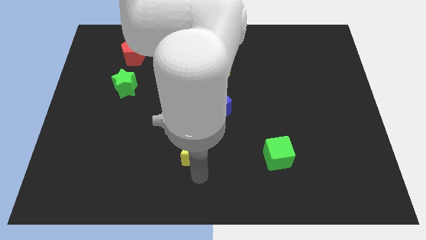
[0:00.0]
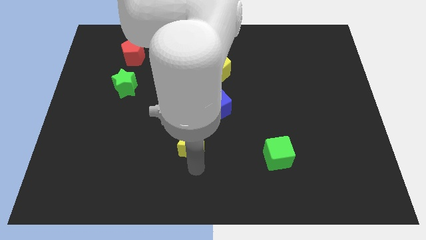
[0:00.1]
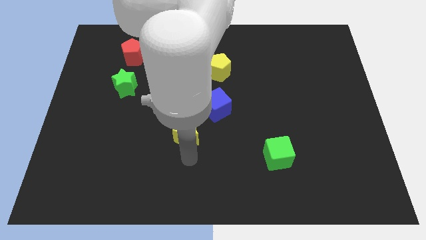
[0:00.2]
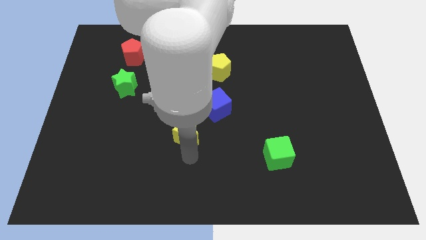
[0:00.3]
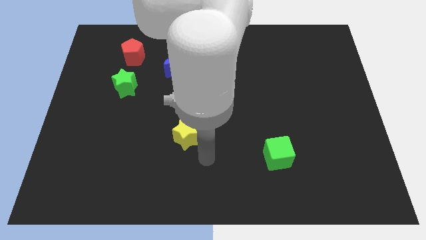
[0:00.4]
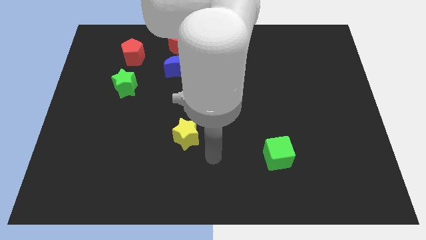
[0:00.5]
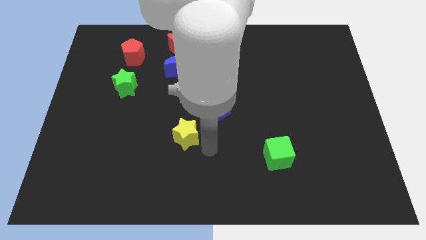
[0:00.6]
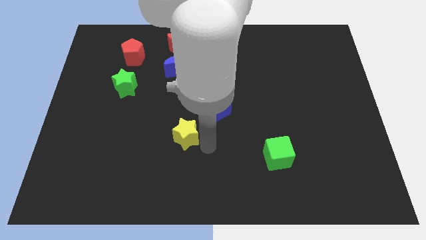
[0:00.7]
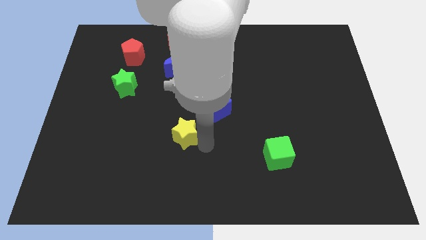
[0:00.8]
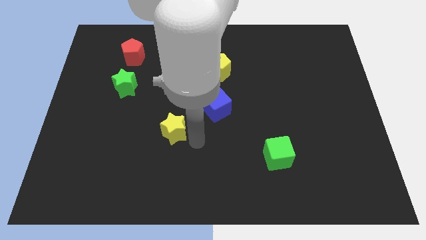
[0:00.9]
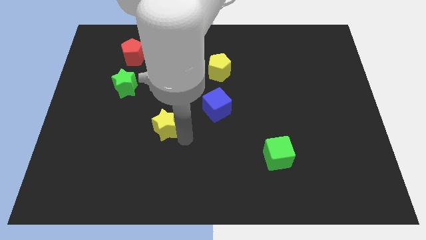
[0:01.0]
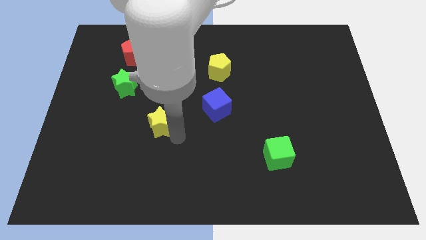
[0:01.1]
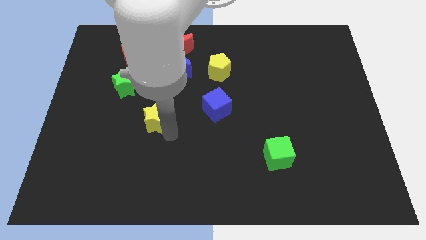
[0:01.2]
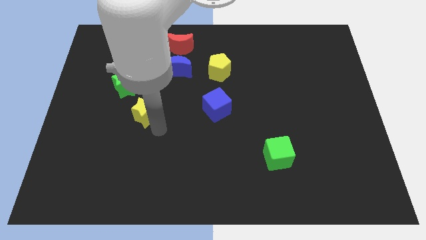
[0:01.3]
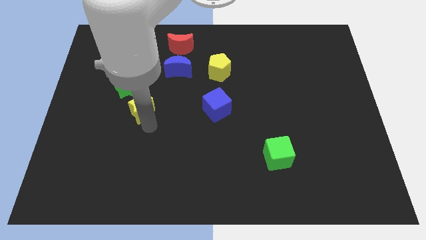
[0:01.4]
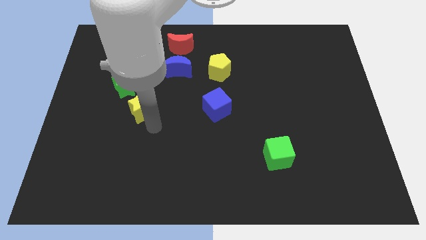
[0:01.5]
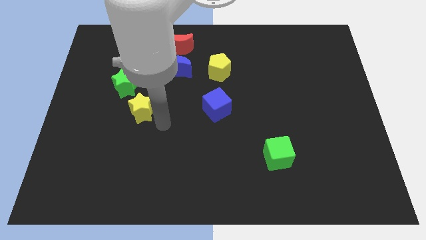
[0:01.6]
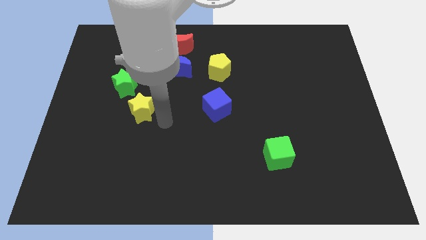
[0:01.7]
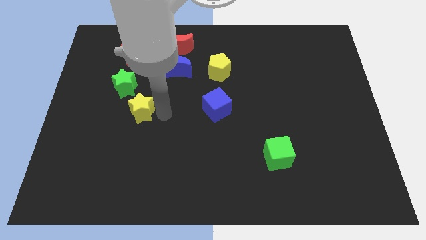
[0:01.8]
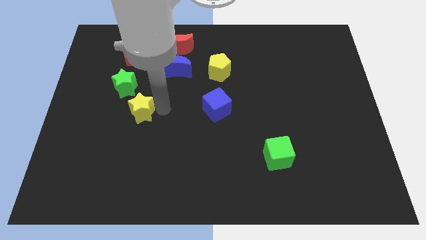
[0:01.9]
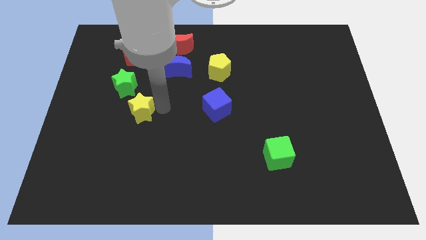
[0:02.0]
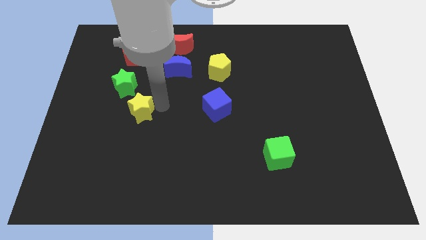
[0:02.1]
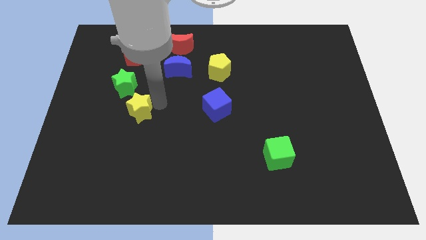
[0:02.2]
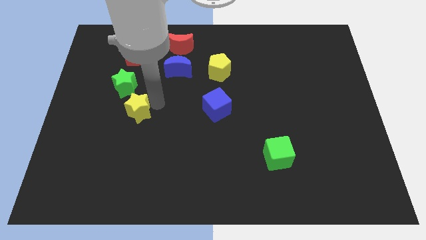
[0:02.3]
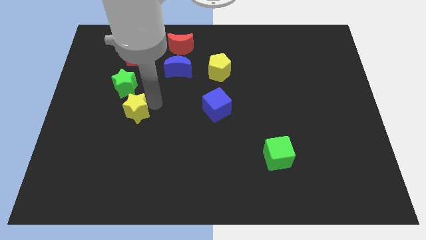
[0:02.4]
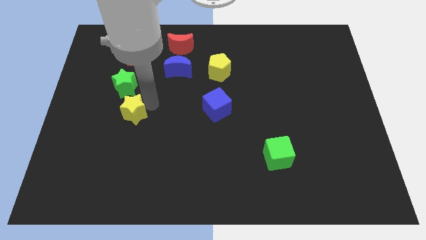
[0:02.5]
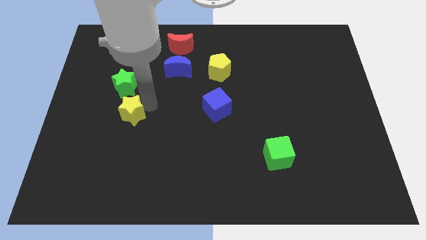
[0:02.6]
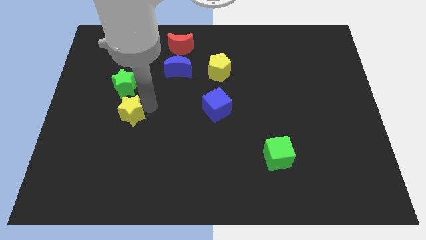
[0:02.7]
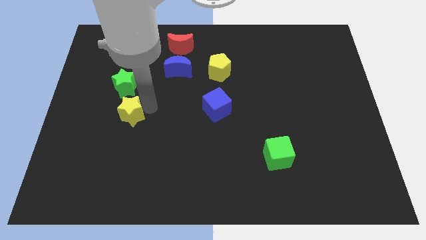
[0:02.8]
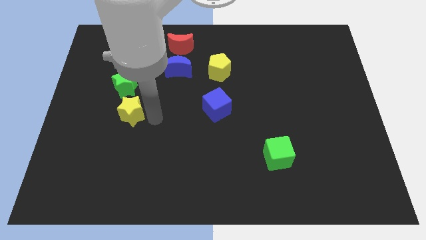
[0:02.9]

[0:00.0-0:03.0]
move the yellow star towards the green star

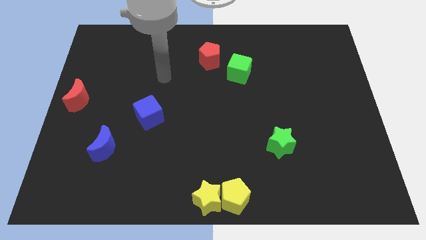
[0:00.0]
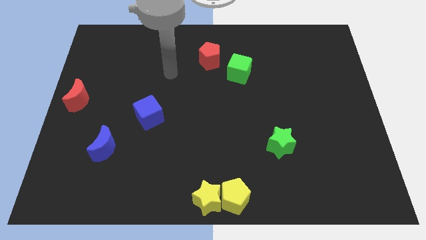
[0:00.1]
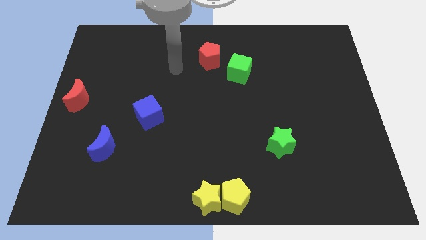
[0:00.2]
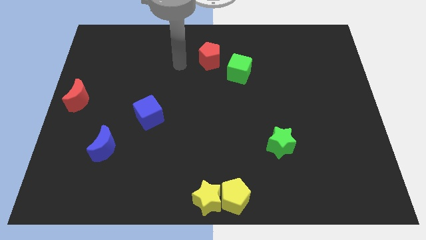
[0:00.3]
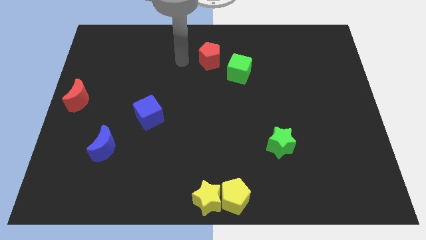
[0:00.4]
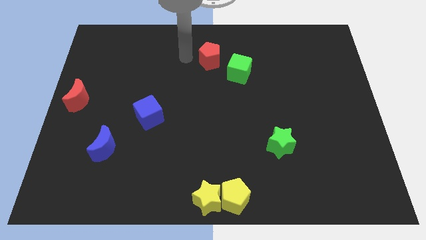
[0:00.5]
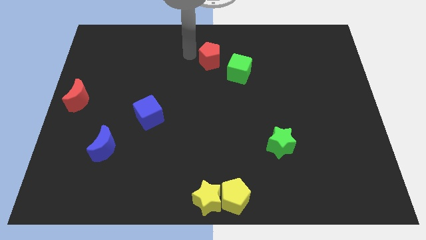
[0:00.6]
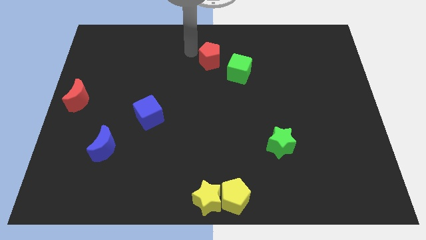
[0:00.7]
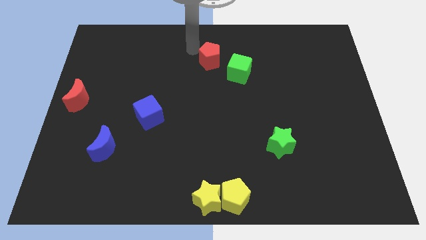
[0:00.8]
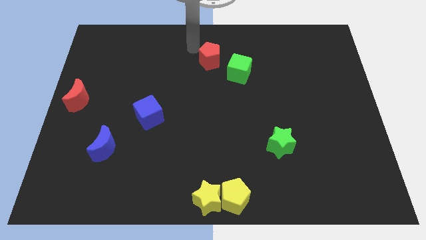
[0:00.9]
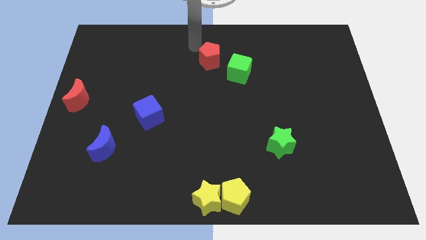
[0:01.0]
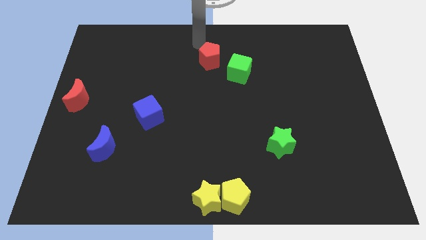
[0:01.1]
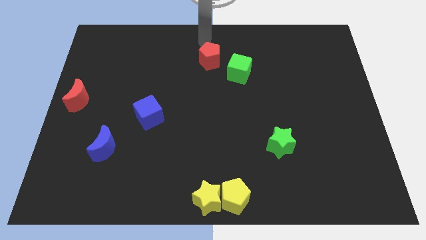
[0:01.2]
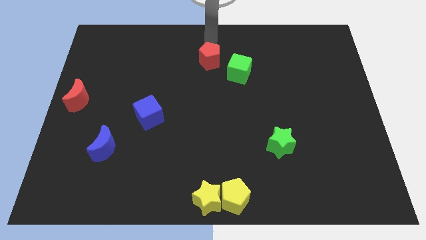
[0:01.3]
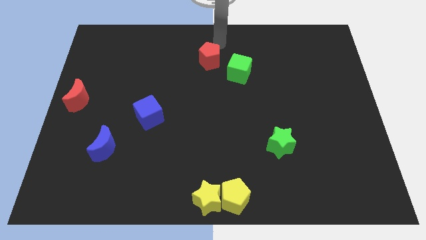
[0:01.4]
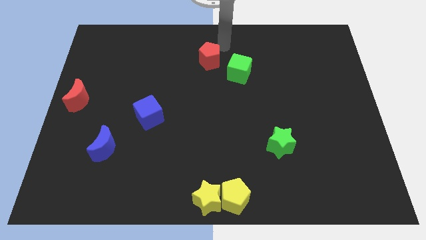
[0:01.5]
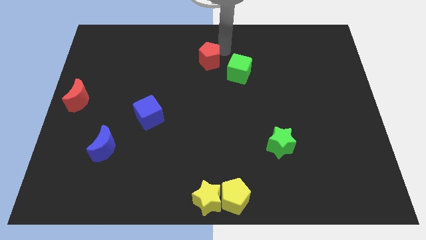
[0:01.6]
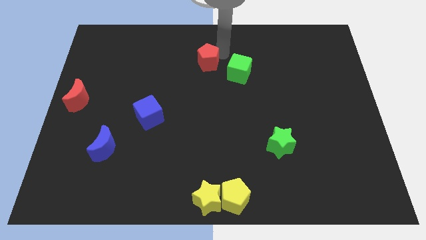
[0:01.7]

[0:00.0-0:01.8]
touch your arm to the red pentagon

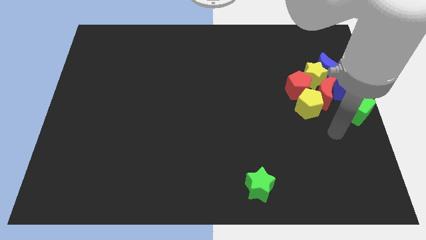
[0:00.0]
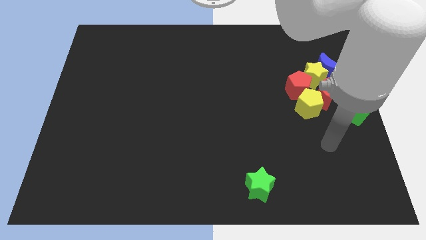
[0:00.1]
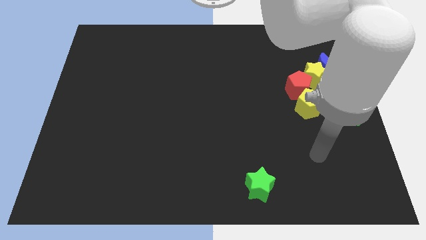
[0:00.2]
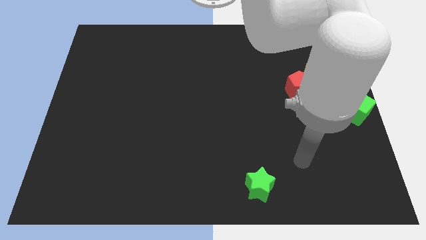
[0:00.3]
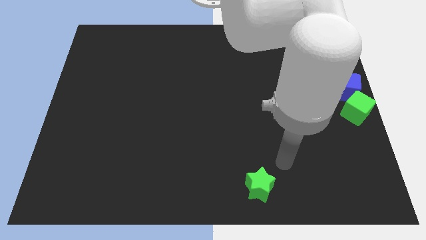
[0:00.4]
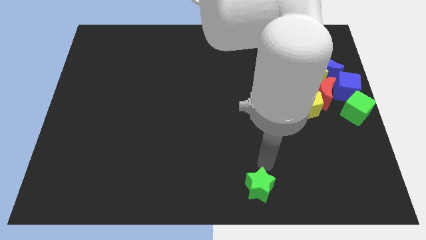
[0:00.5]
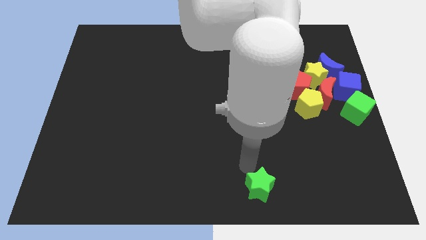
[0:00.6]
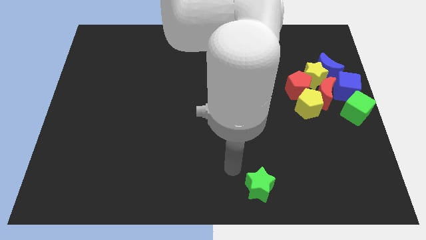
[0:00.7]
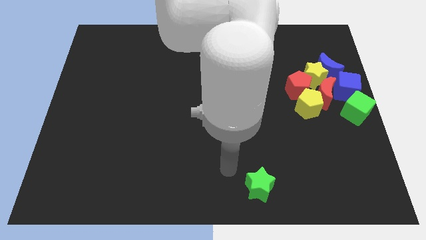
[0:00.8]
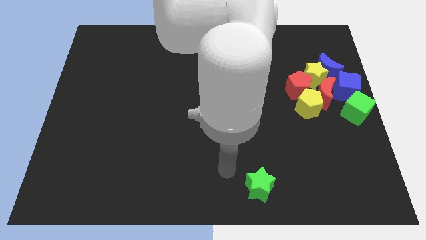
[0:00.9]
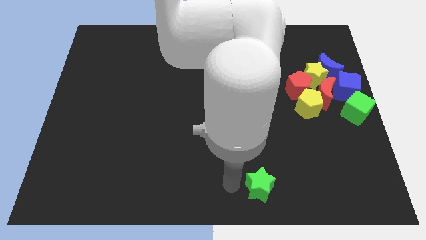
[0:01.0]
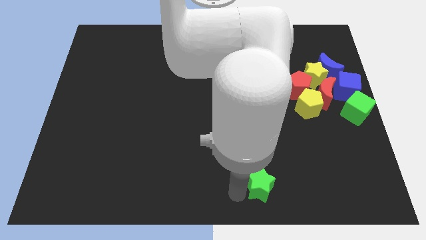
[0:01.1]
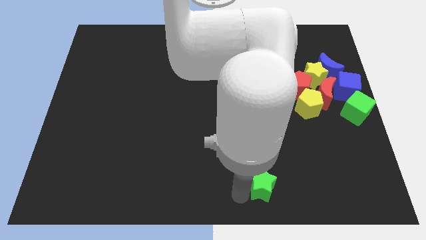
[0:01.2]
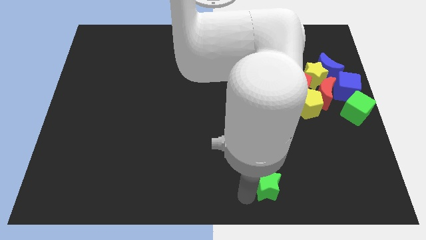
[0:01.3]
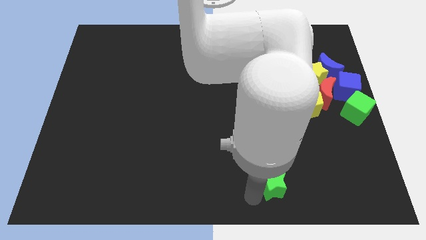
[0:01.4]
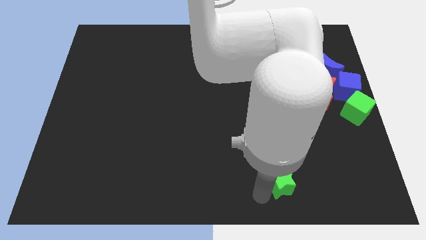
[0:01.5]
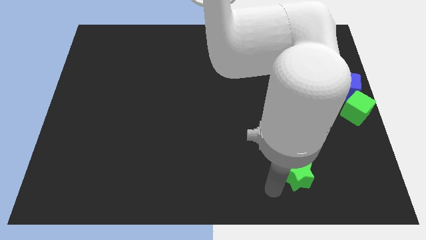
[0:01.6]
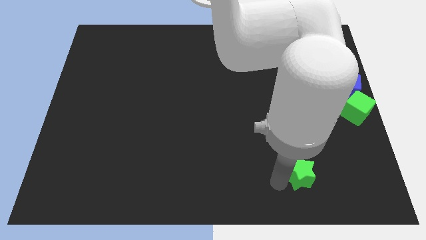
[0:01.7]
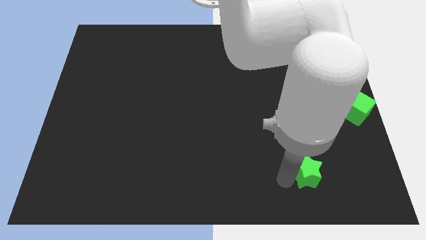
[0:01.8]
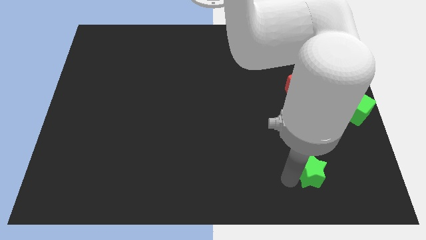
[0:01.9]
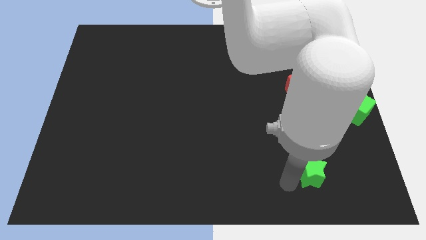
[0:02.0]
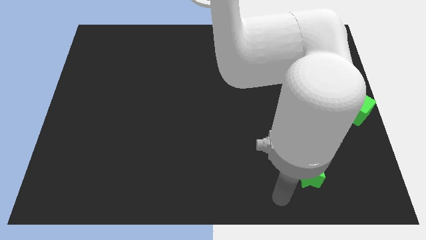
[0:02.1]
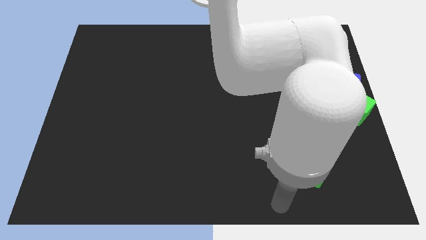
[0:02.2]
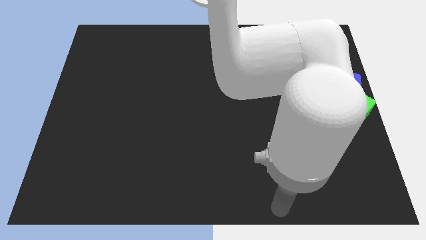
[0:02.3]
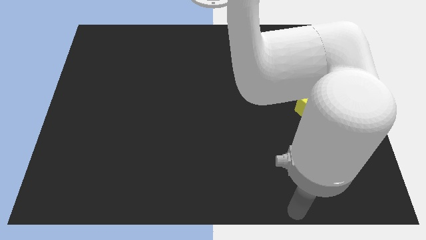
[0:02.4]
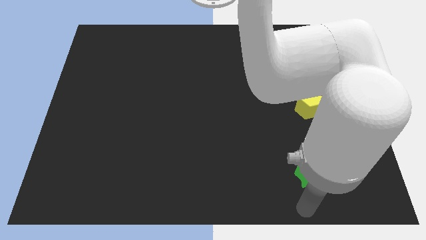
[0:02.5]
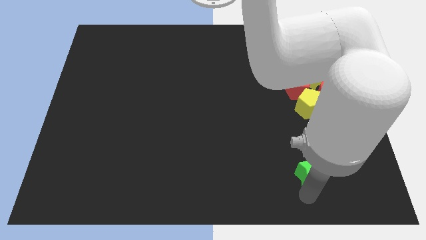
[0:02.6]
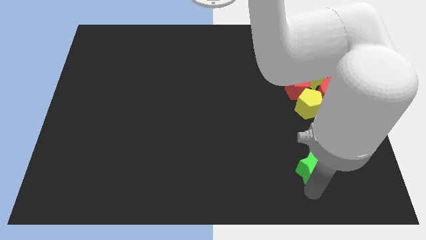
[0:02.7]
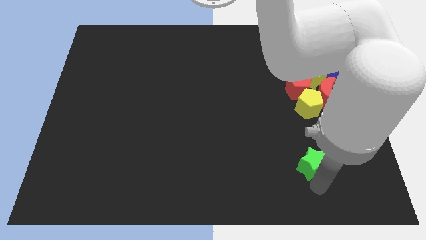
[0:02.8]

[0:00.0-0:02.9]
move green star towards right side

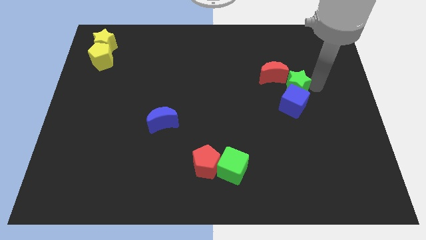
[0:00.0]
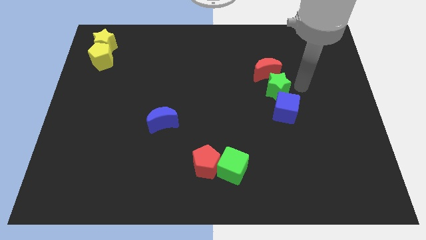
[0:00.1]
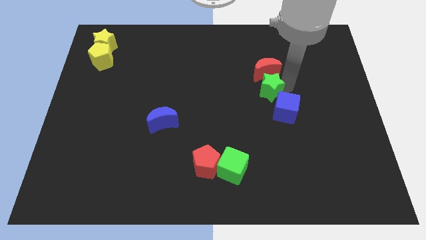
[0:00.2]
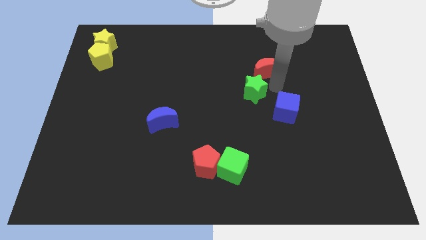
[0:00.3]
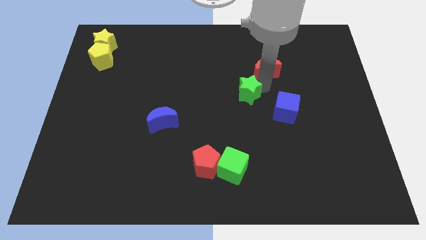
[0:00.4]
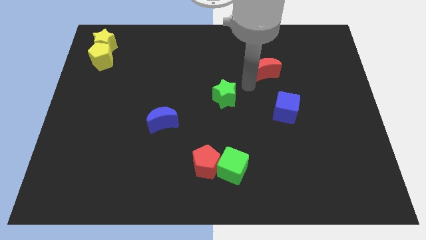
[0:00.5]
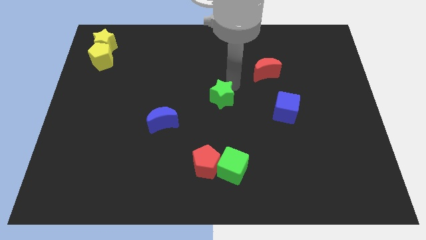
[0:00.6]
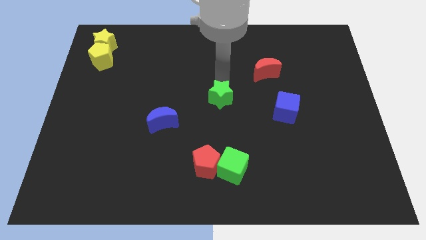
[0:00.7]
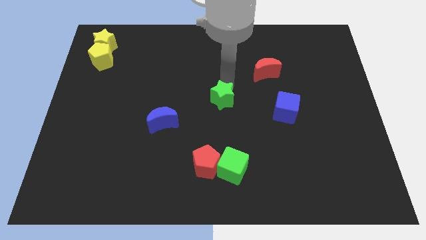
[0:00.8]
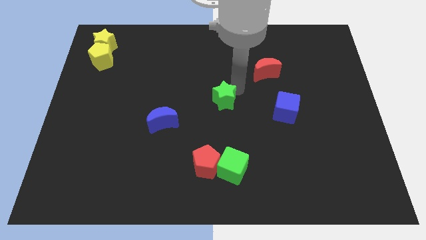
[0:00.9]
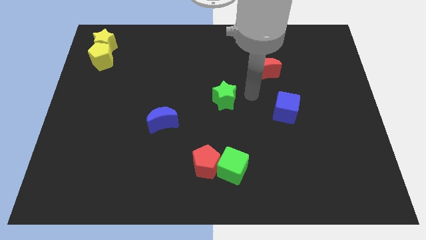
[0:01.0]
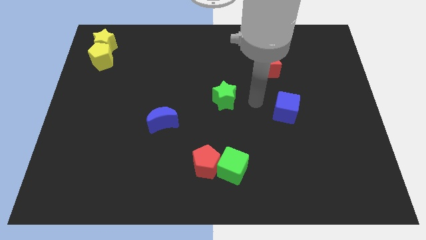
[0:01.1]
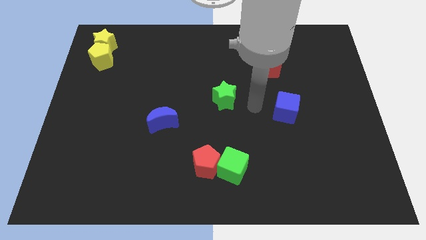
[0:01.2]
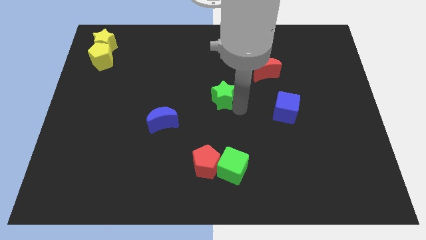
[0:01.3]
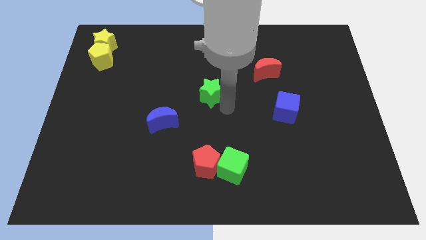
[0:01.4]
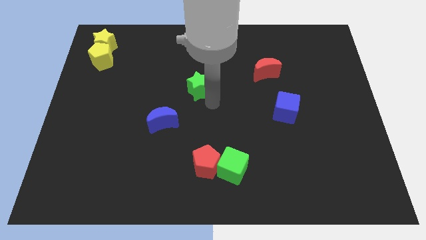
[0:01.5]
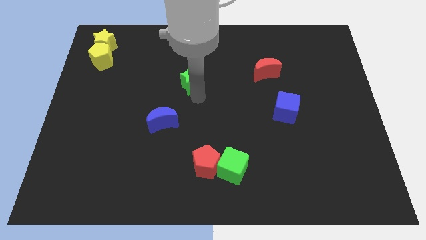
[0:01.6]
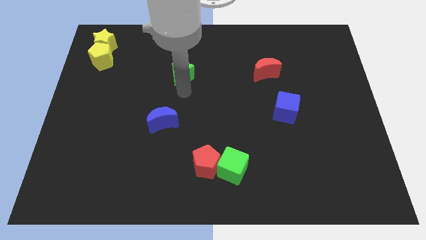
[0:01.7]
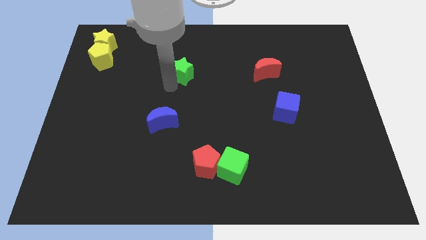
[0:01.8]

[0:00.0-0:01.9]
separate the green star from red moon and blue cube
